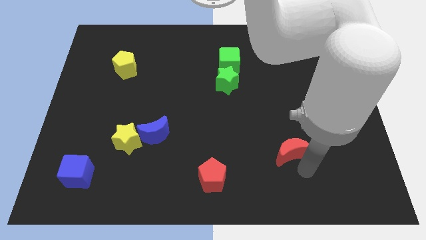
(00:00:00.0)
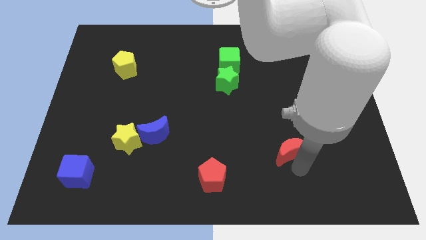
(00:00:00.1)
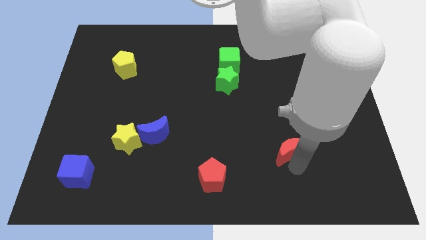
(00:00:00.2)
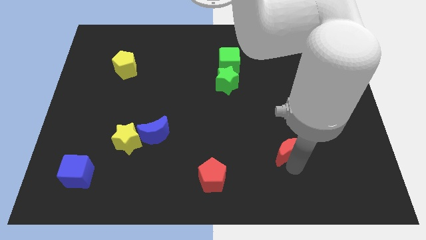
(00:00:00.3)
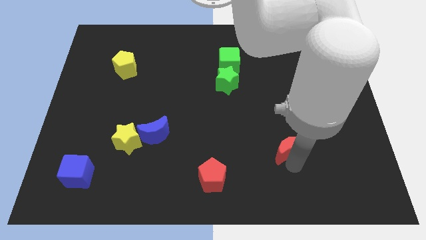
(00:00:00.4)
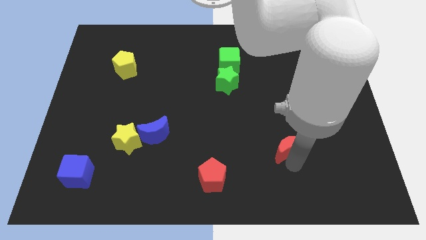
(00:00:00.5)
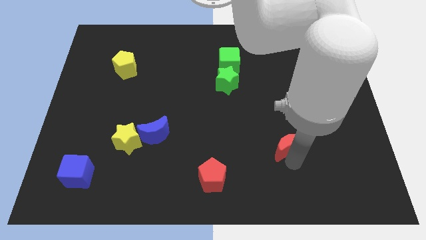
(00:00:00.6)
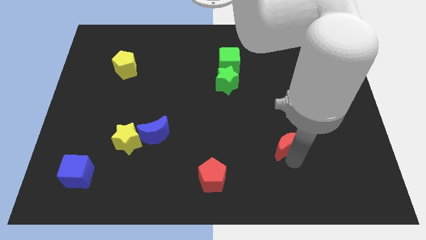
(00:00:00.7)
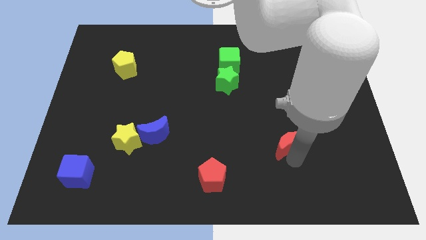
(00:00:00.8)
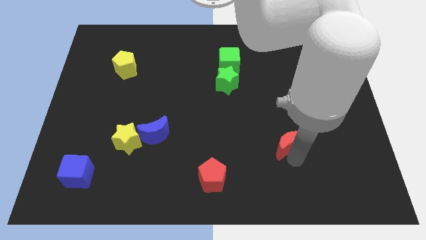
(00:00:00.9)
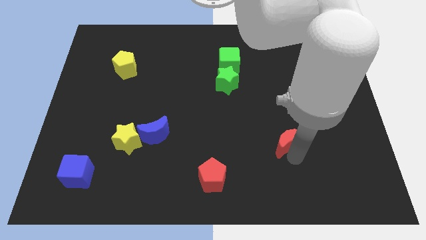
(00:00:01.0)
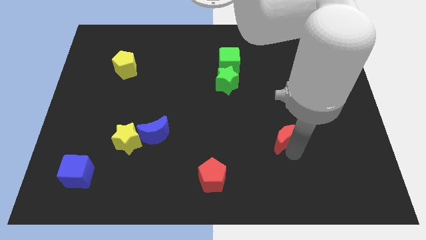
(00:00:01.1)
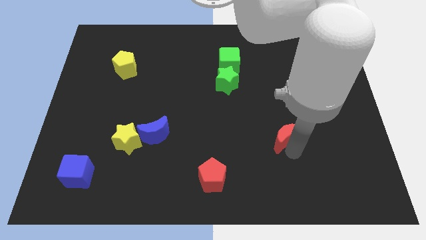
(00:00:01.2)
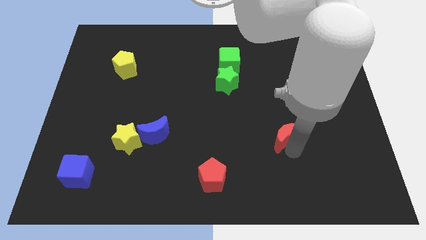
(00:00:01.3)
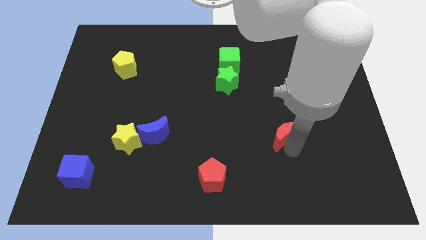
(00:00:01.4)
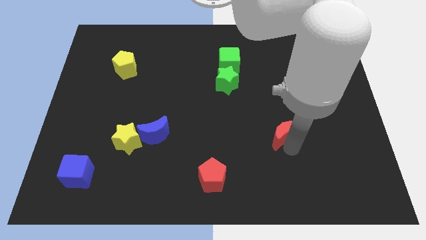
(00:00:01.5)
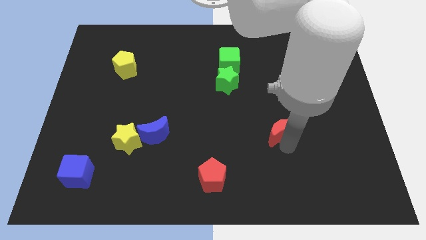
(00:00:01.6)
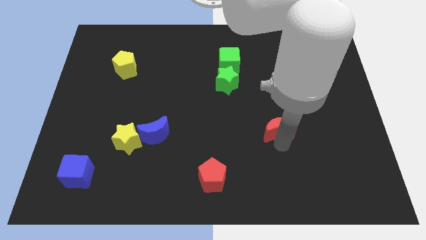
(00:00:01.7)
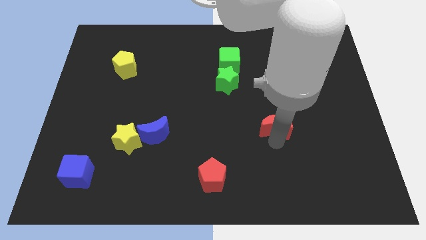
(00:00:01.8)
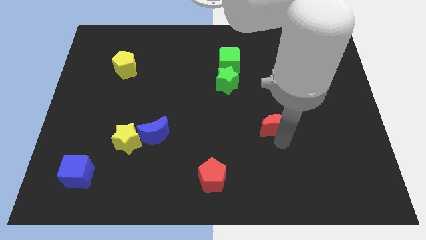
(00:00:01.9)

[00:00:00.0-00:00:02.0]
push the red crescent diagonally on the top right side of the red pentagon

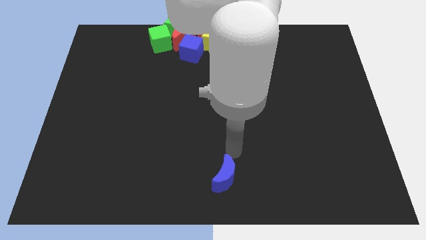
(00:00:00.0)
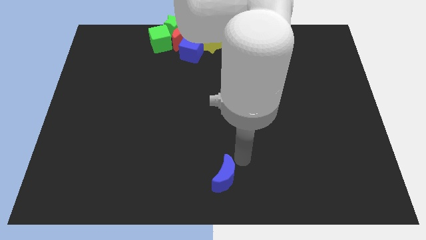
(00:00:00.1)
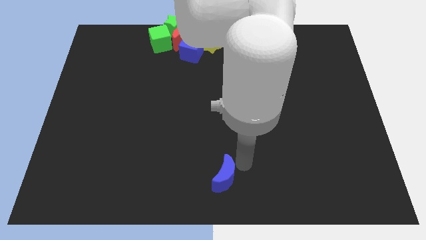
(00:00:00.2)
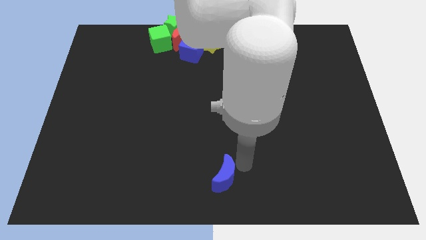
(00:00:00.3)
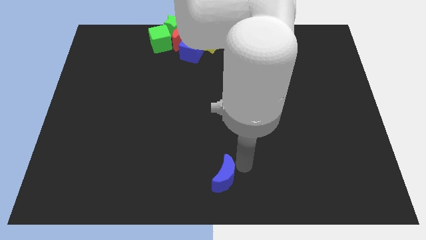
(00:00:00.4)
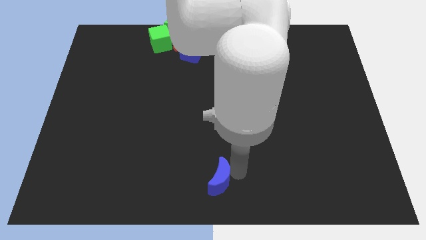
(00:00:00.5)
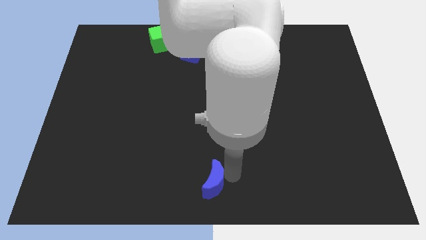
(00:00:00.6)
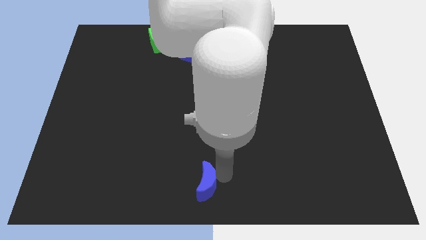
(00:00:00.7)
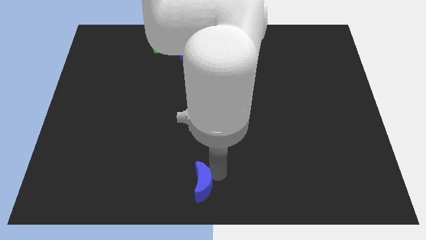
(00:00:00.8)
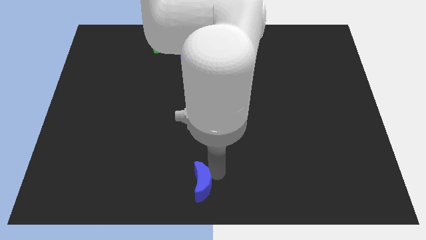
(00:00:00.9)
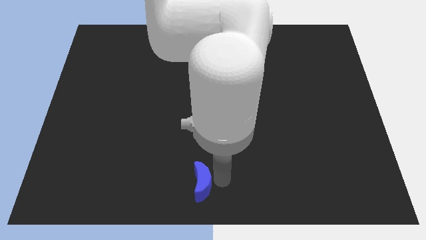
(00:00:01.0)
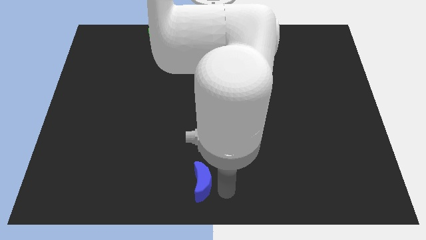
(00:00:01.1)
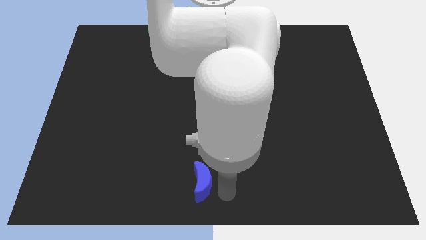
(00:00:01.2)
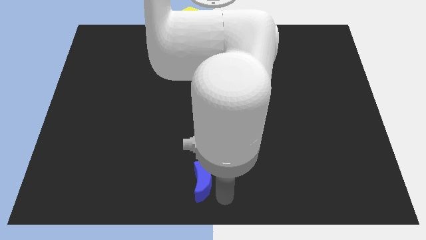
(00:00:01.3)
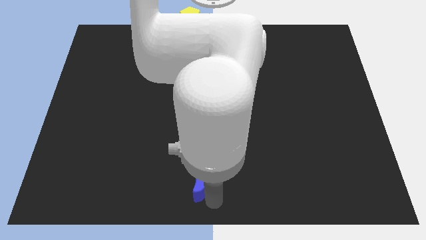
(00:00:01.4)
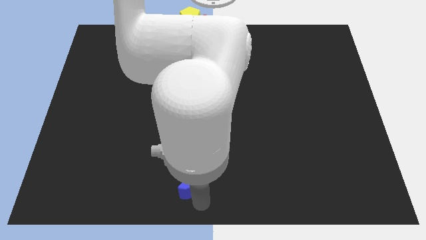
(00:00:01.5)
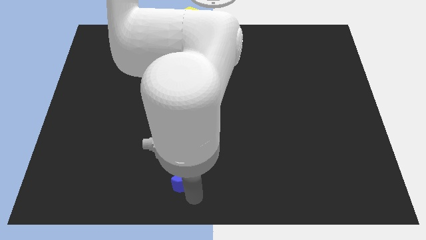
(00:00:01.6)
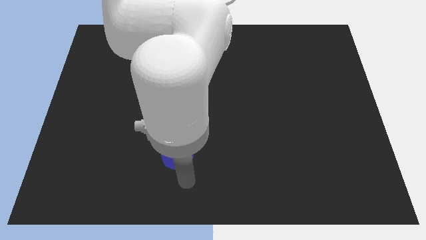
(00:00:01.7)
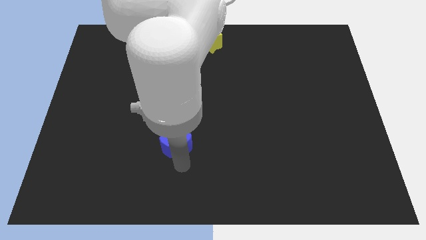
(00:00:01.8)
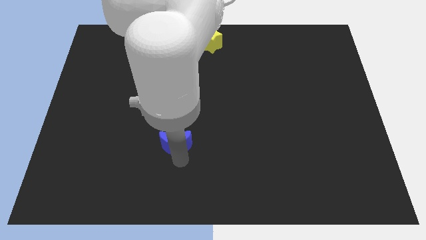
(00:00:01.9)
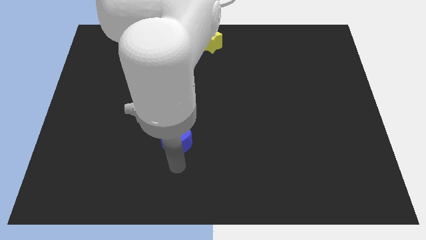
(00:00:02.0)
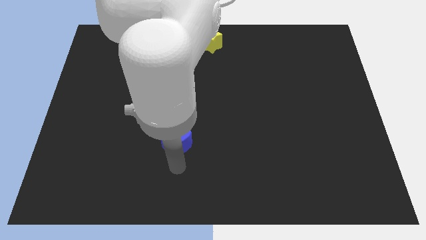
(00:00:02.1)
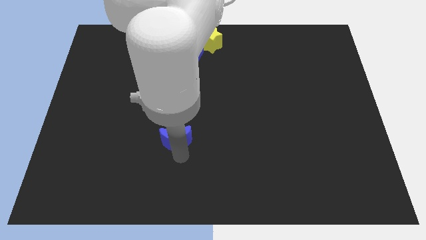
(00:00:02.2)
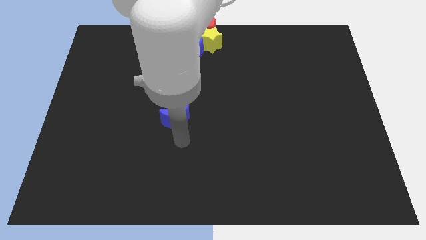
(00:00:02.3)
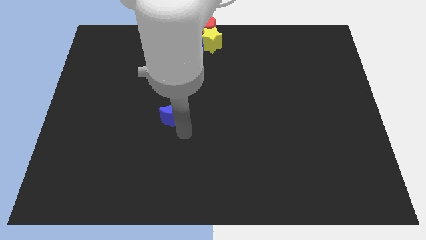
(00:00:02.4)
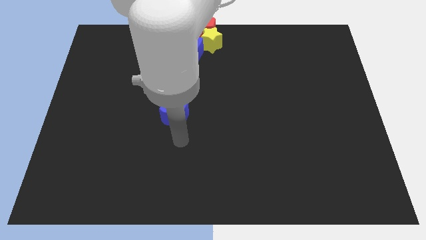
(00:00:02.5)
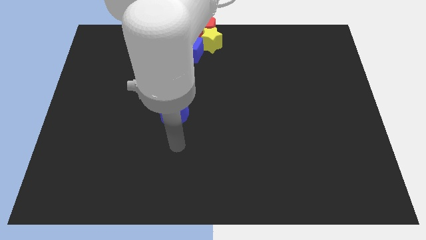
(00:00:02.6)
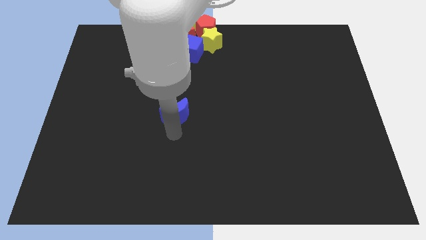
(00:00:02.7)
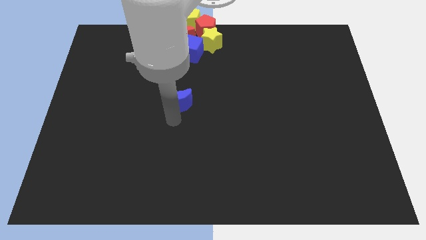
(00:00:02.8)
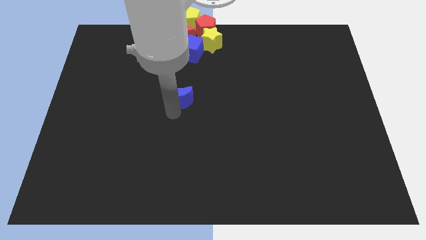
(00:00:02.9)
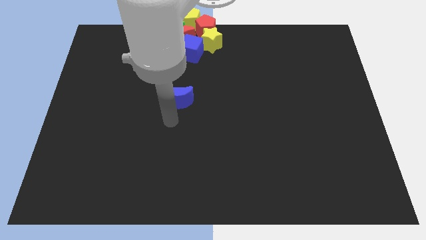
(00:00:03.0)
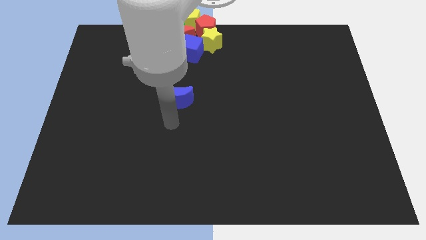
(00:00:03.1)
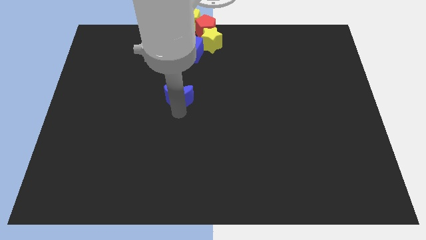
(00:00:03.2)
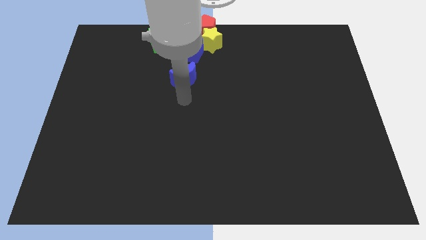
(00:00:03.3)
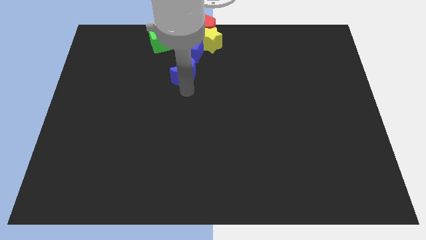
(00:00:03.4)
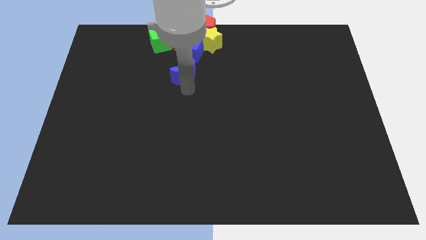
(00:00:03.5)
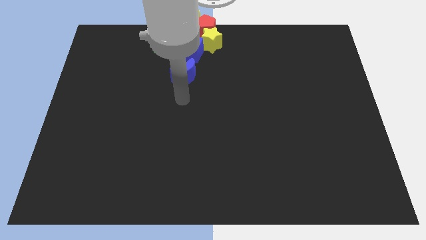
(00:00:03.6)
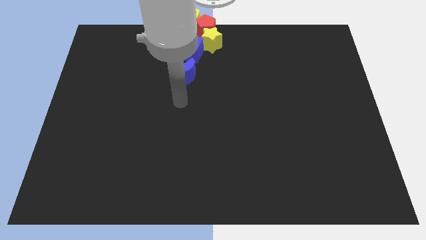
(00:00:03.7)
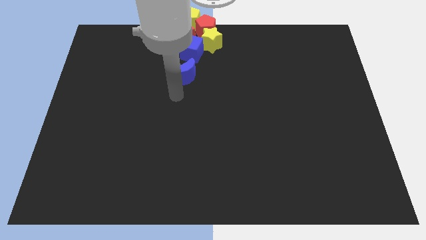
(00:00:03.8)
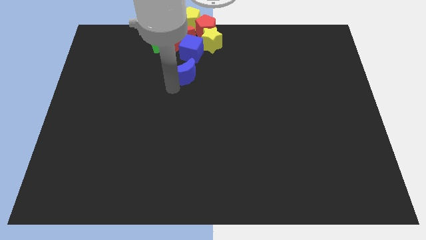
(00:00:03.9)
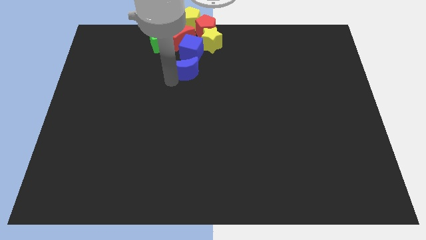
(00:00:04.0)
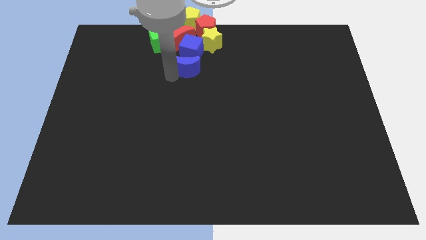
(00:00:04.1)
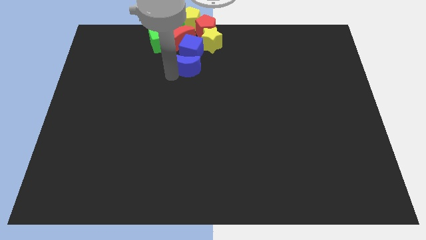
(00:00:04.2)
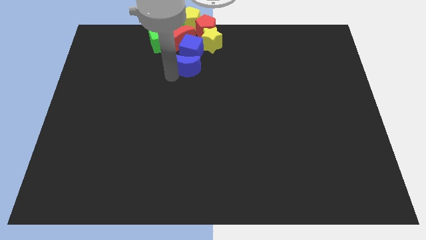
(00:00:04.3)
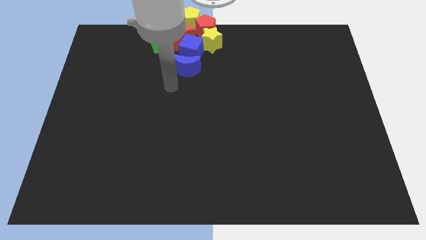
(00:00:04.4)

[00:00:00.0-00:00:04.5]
place the blue moon down to the blue cube

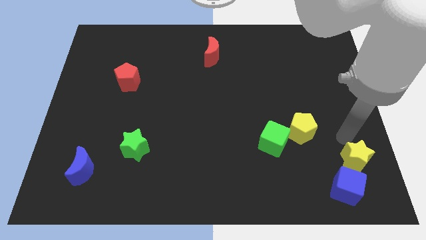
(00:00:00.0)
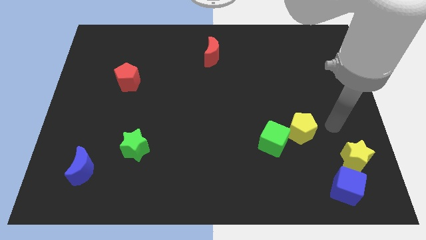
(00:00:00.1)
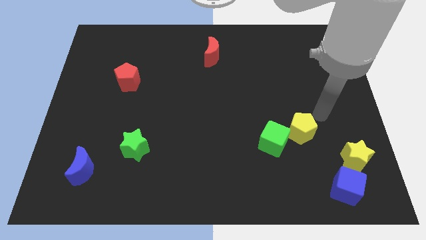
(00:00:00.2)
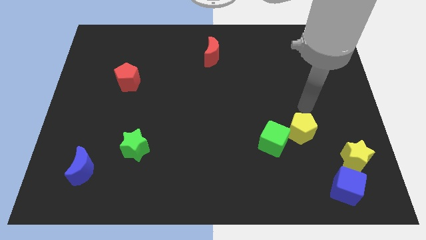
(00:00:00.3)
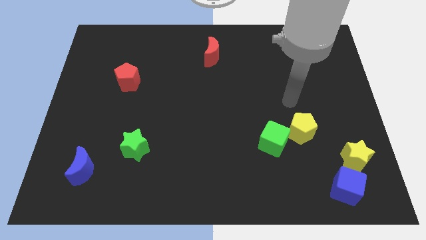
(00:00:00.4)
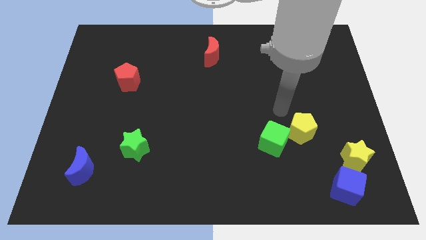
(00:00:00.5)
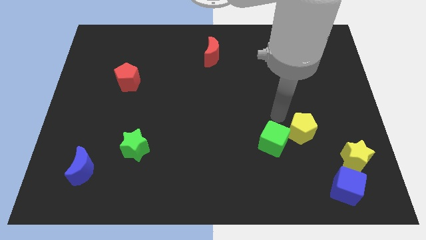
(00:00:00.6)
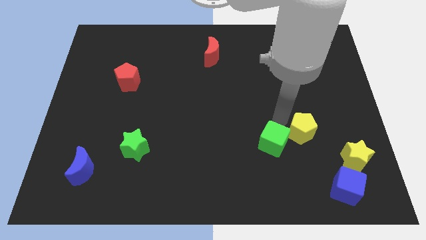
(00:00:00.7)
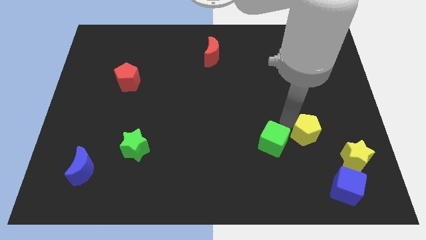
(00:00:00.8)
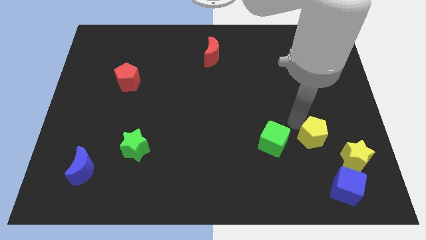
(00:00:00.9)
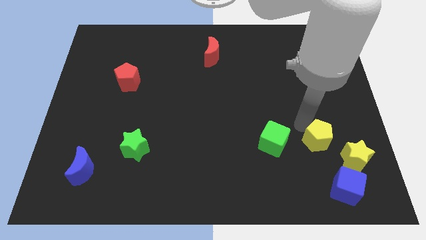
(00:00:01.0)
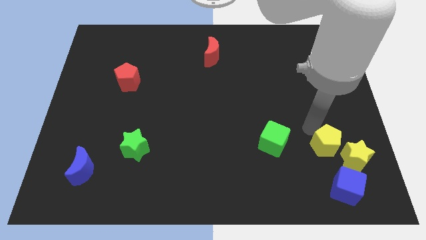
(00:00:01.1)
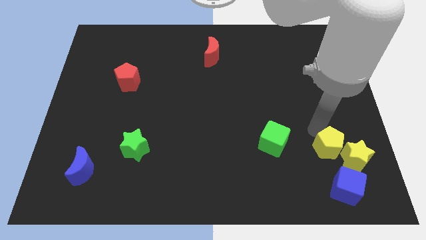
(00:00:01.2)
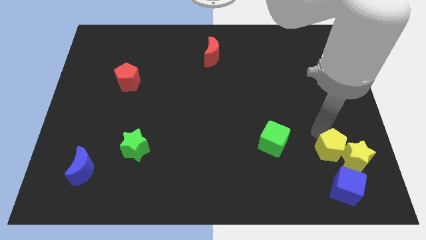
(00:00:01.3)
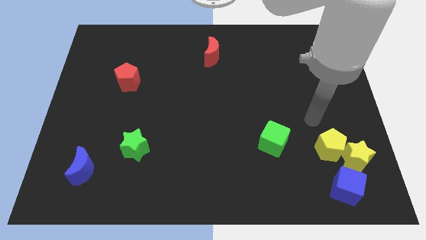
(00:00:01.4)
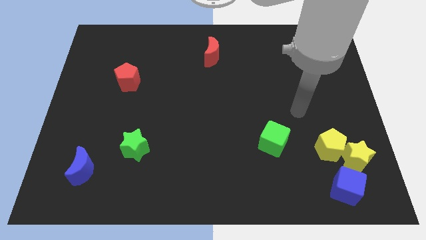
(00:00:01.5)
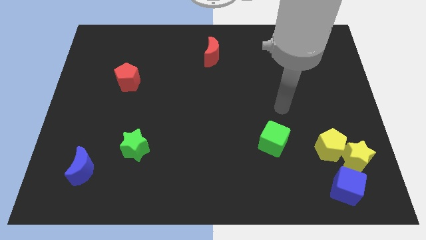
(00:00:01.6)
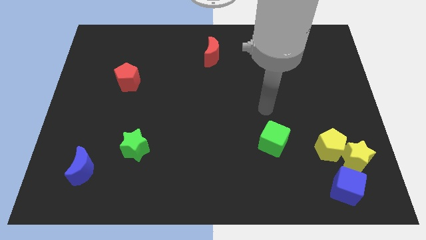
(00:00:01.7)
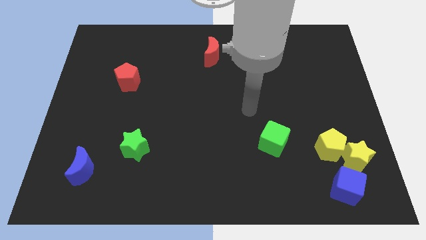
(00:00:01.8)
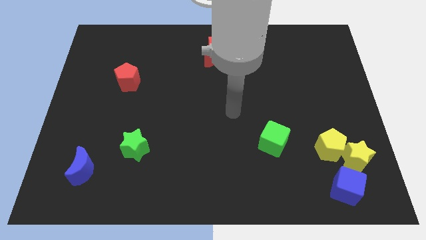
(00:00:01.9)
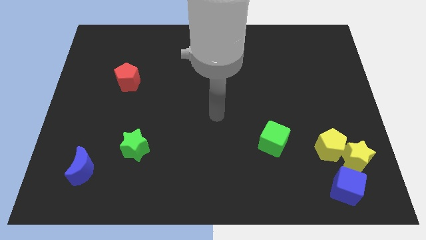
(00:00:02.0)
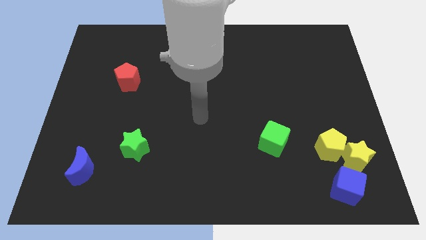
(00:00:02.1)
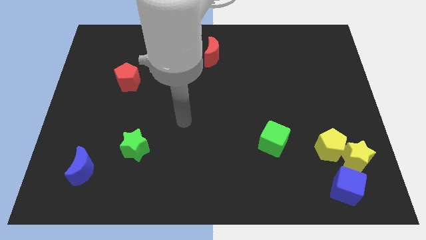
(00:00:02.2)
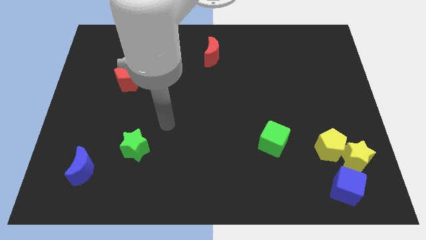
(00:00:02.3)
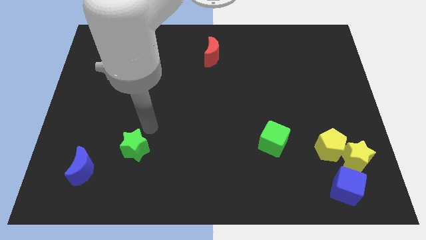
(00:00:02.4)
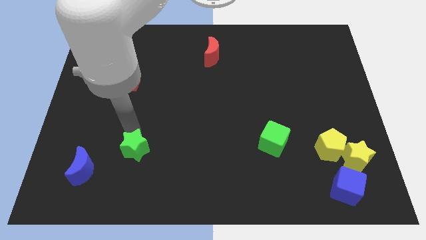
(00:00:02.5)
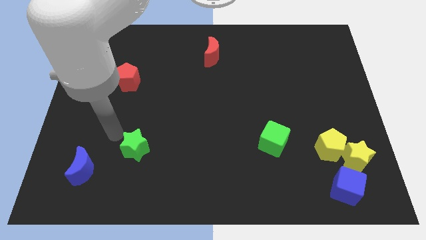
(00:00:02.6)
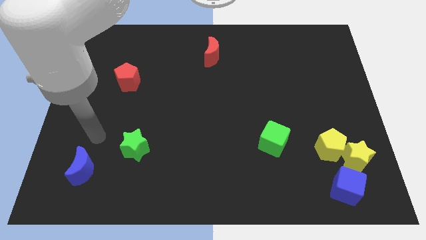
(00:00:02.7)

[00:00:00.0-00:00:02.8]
move the yellow pentagon to the left of the yellow star
